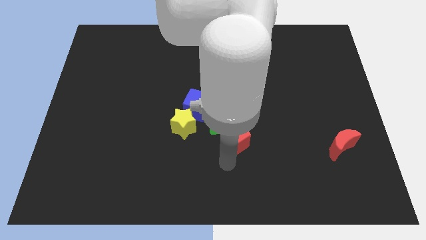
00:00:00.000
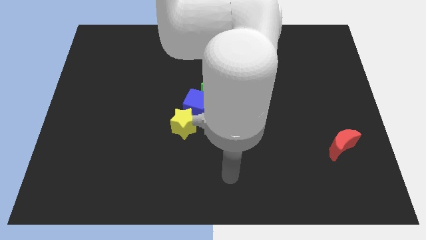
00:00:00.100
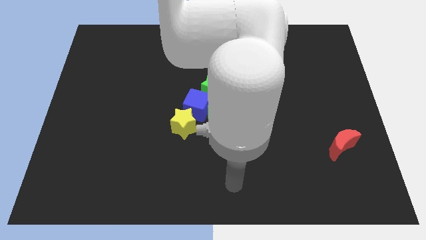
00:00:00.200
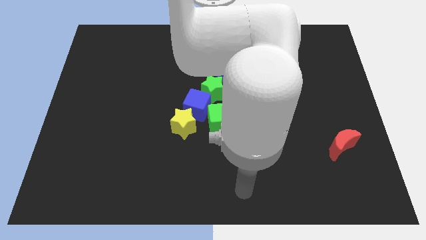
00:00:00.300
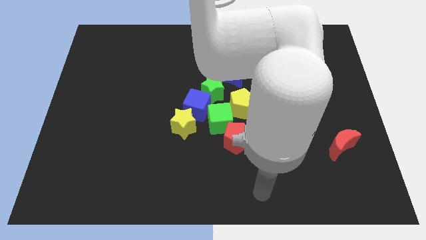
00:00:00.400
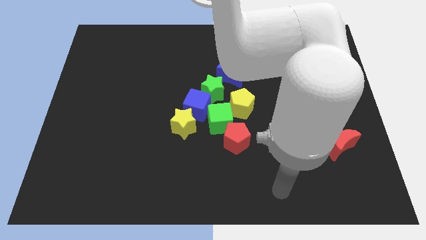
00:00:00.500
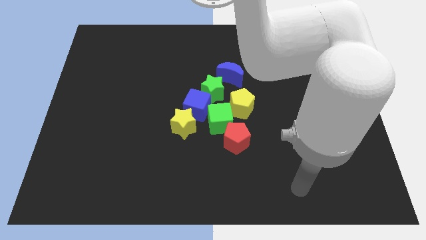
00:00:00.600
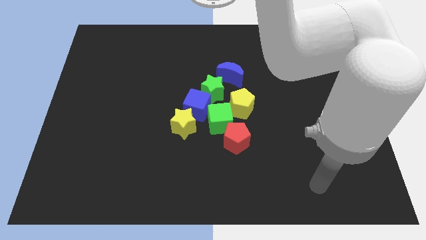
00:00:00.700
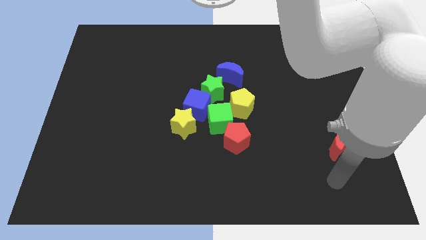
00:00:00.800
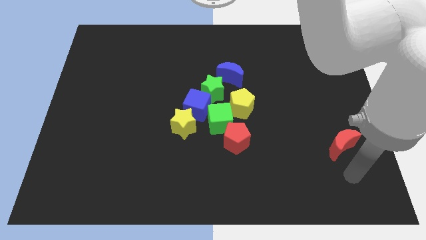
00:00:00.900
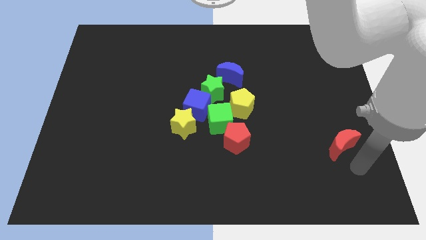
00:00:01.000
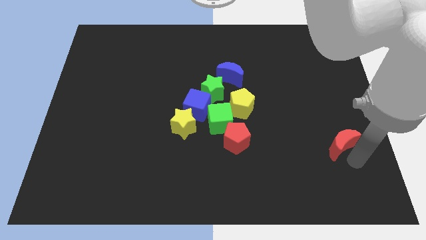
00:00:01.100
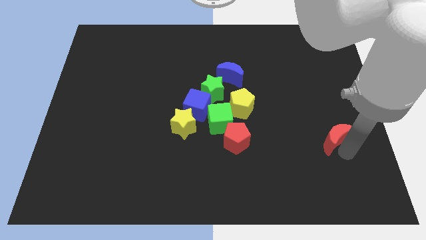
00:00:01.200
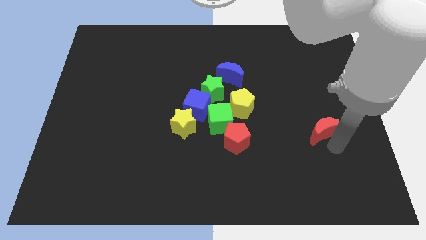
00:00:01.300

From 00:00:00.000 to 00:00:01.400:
move away from the red pentagon

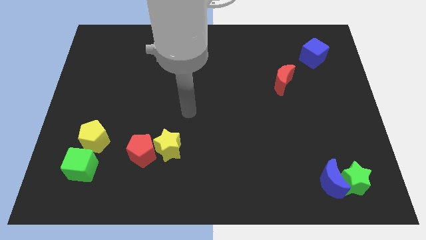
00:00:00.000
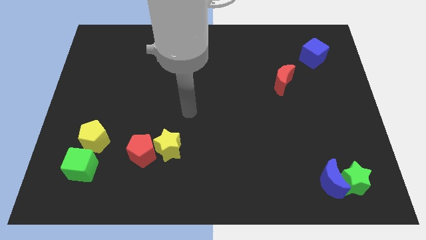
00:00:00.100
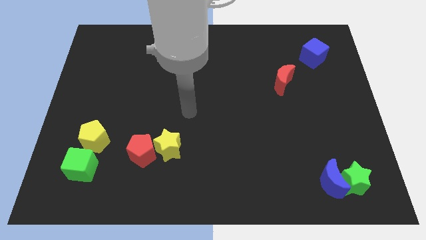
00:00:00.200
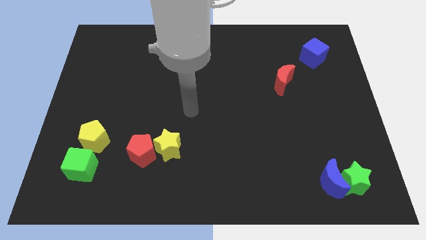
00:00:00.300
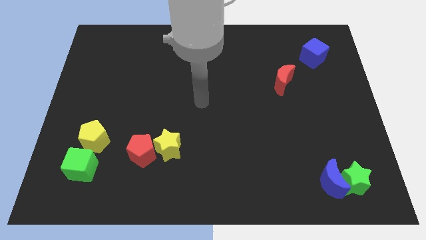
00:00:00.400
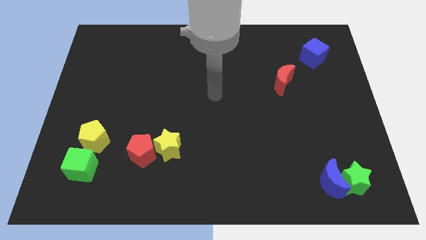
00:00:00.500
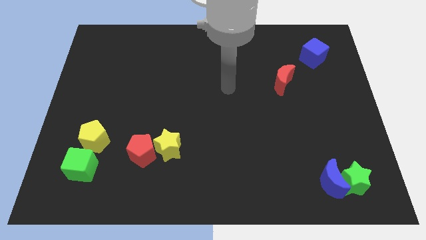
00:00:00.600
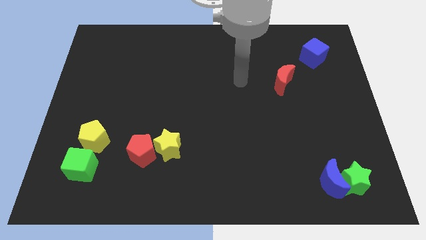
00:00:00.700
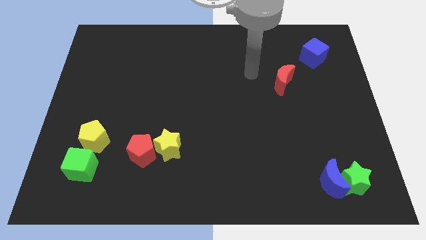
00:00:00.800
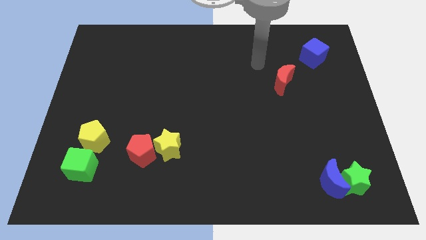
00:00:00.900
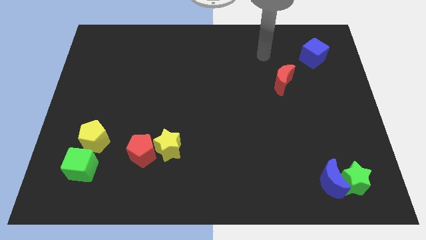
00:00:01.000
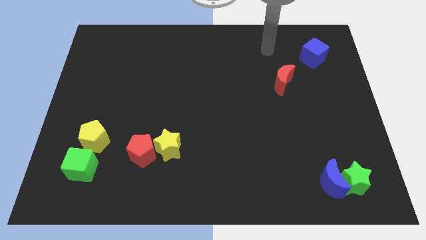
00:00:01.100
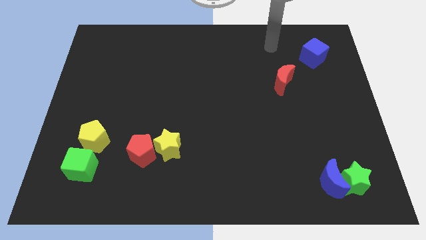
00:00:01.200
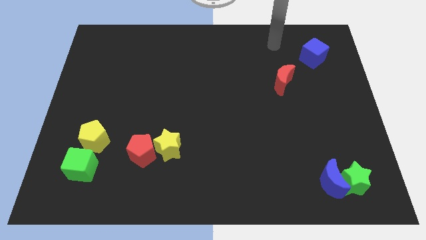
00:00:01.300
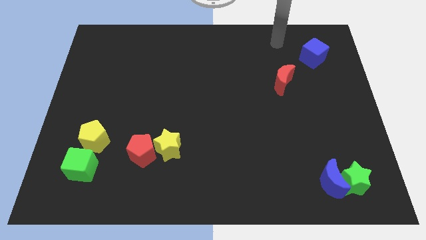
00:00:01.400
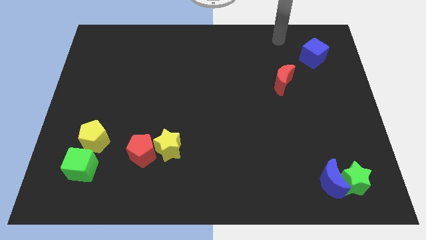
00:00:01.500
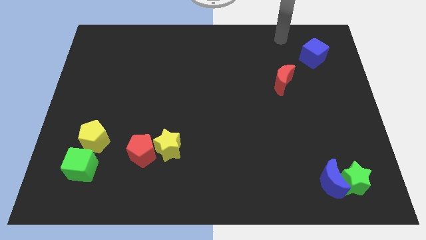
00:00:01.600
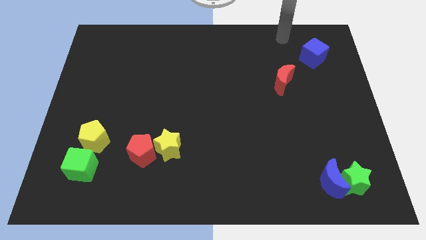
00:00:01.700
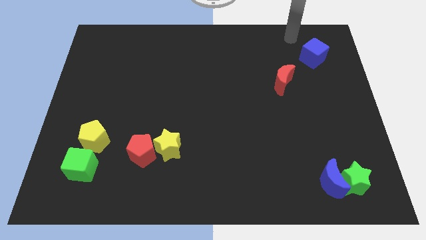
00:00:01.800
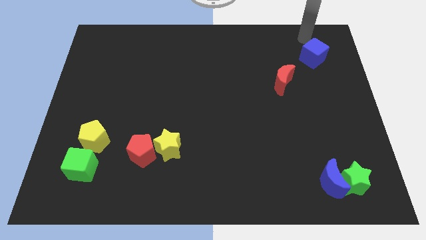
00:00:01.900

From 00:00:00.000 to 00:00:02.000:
move the arm towards the blue cube on the board

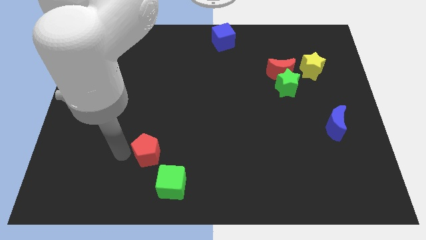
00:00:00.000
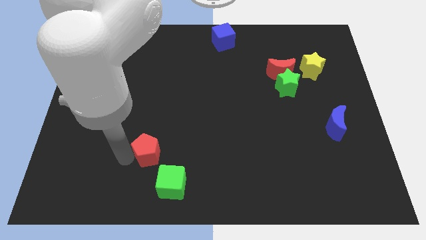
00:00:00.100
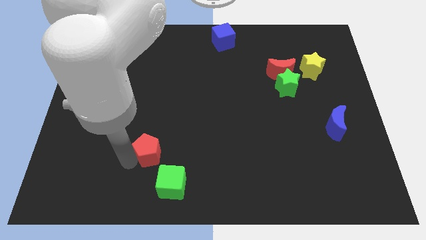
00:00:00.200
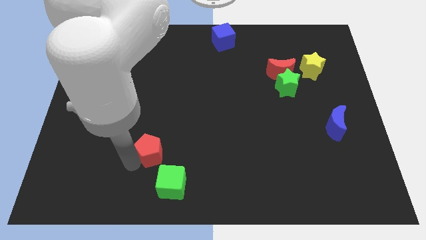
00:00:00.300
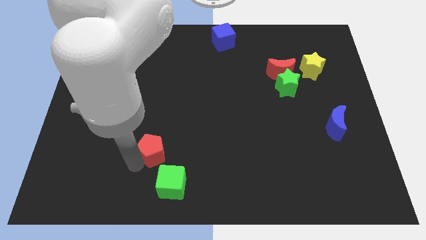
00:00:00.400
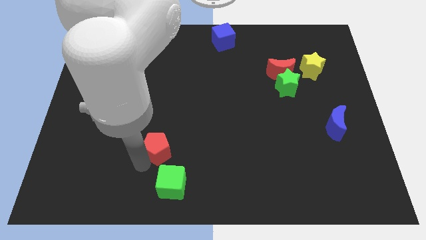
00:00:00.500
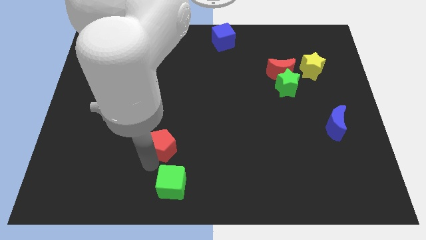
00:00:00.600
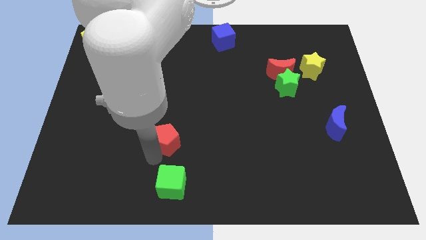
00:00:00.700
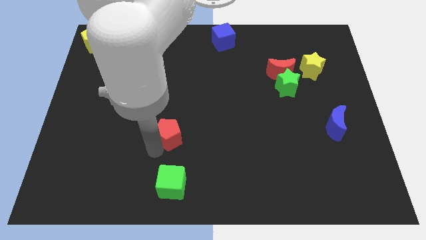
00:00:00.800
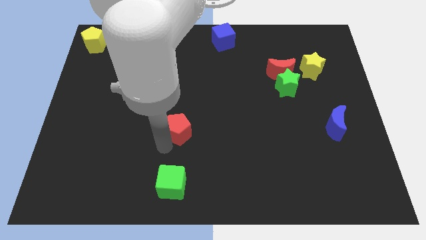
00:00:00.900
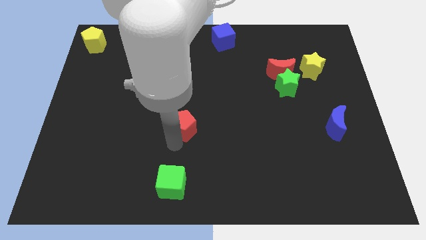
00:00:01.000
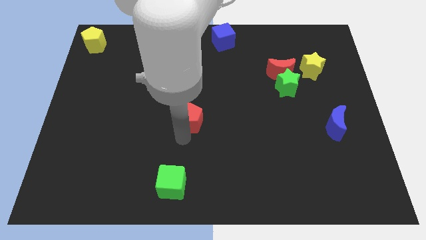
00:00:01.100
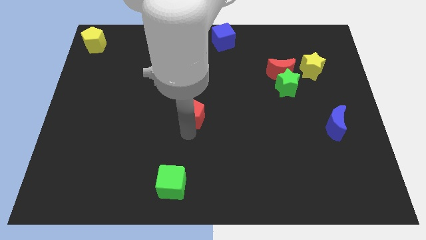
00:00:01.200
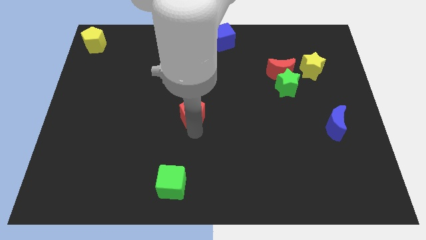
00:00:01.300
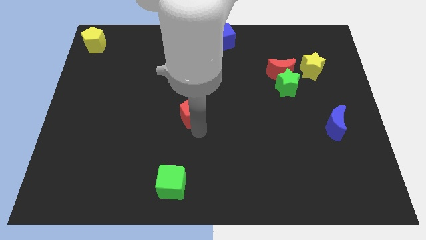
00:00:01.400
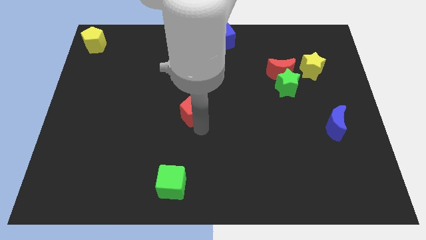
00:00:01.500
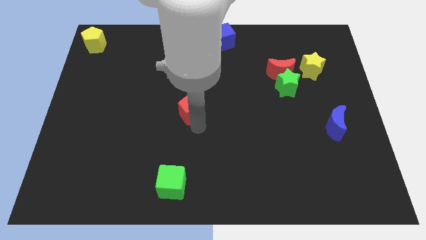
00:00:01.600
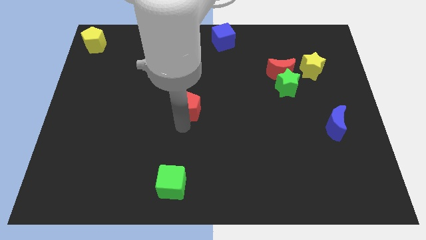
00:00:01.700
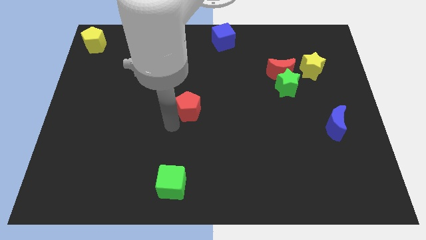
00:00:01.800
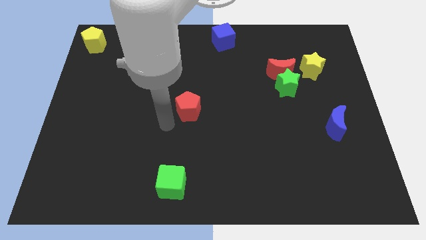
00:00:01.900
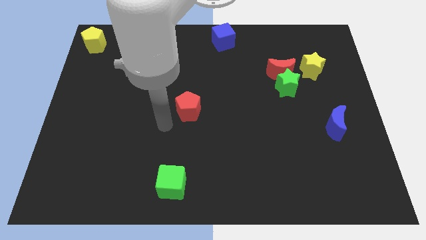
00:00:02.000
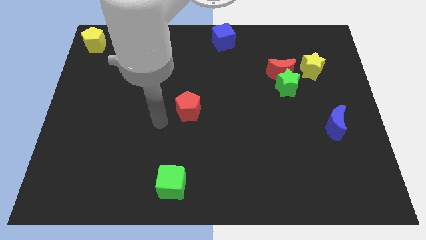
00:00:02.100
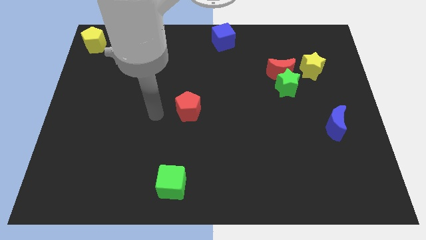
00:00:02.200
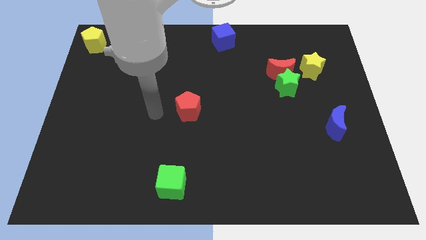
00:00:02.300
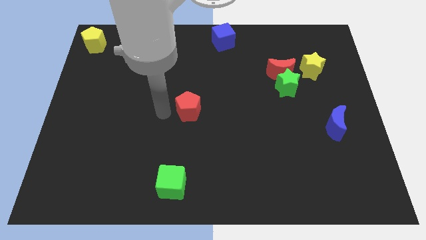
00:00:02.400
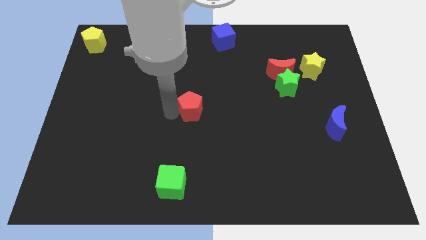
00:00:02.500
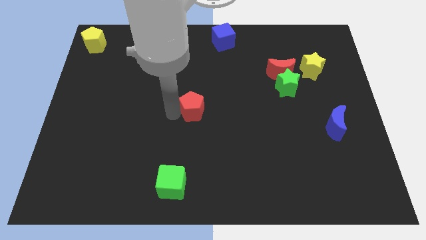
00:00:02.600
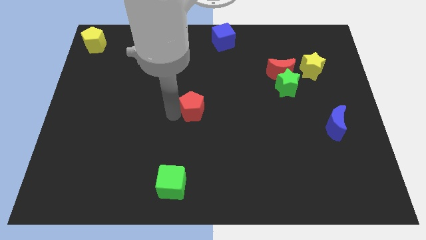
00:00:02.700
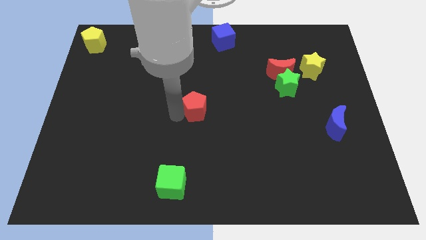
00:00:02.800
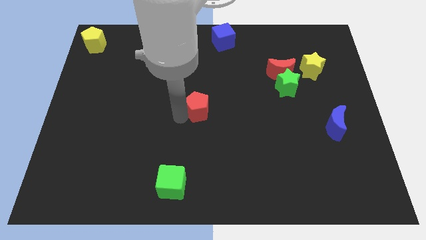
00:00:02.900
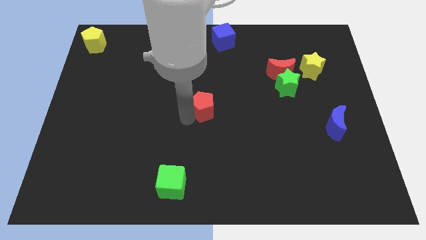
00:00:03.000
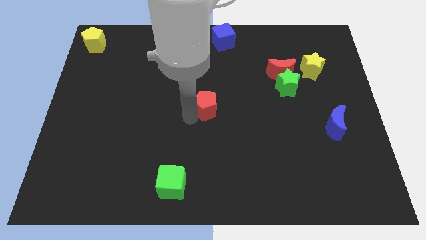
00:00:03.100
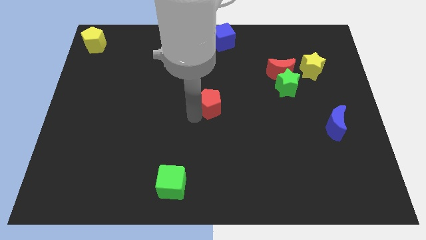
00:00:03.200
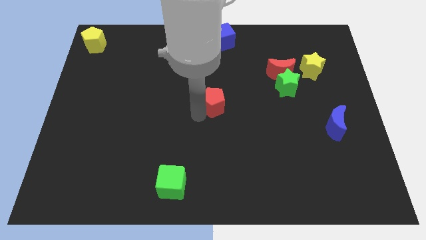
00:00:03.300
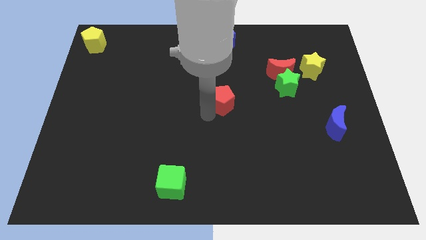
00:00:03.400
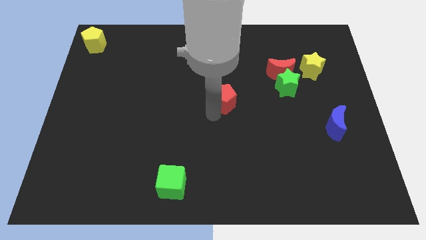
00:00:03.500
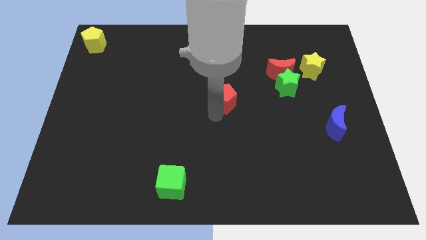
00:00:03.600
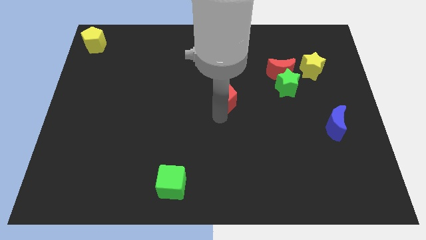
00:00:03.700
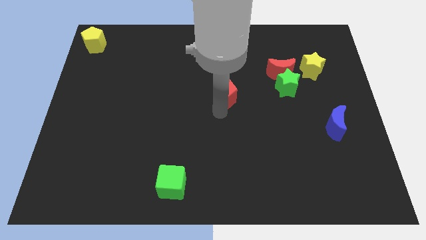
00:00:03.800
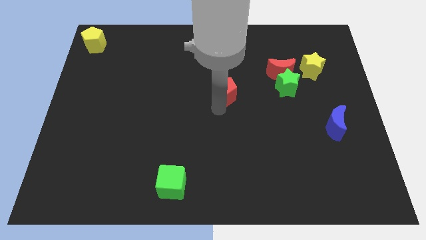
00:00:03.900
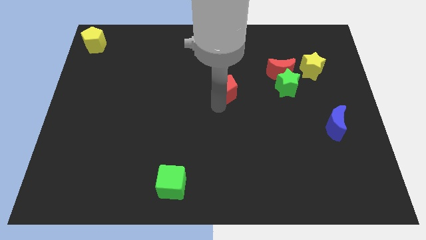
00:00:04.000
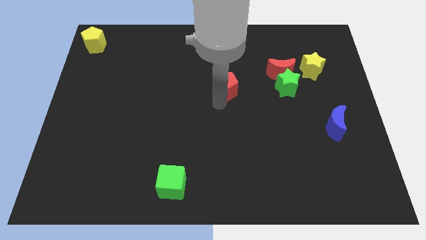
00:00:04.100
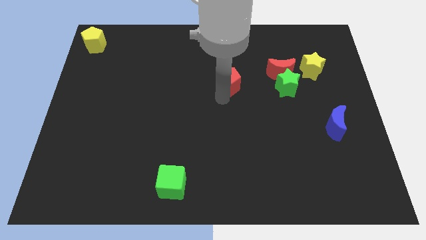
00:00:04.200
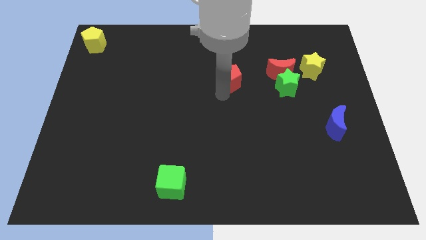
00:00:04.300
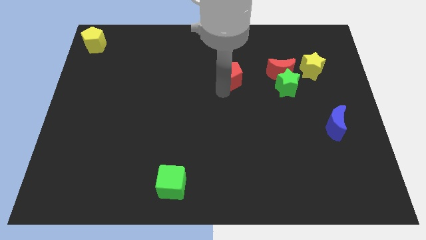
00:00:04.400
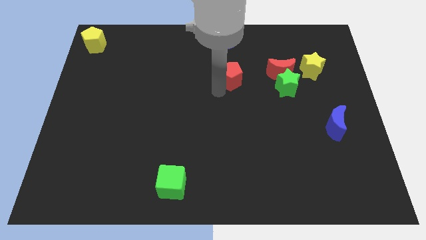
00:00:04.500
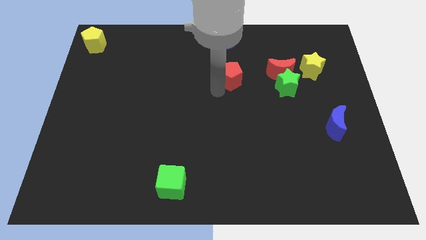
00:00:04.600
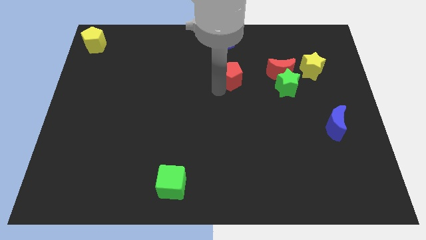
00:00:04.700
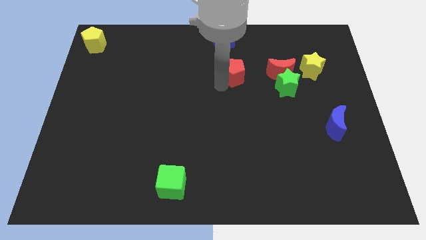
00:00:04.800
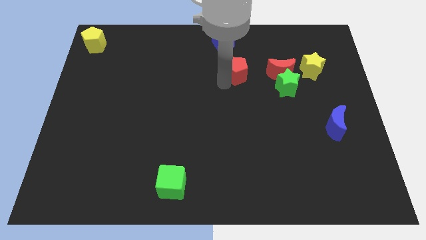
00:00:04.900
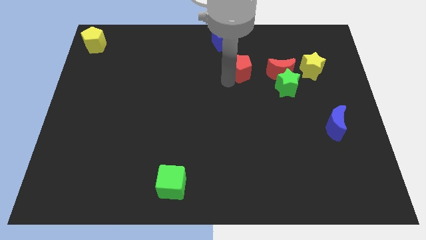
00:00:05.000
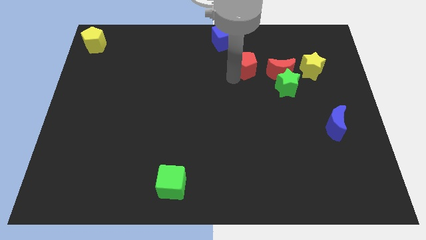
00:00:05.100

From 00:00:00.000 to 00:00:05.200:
place red pentagon adjacent to red moon

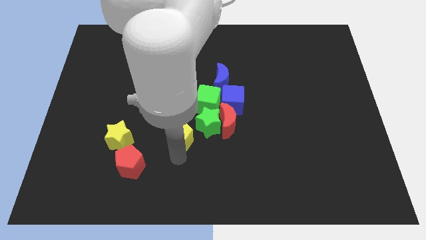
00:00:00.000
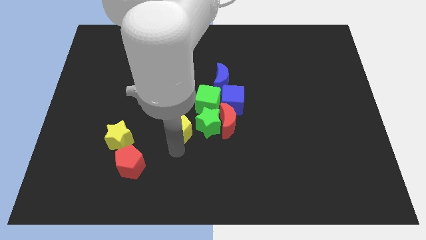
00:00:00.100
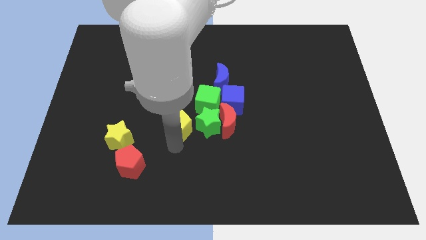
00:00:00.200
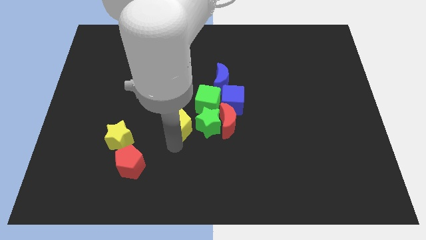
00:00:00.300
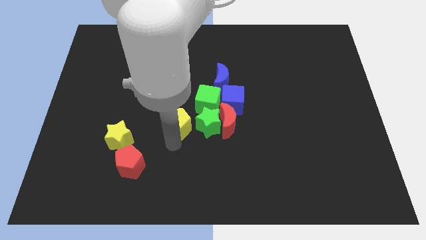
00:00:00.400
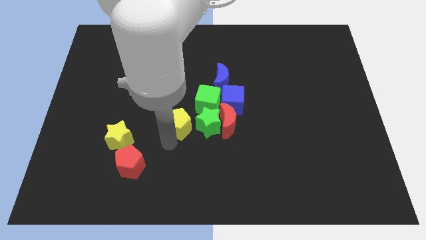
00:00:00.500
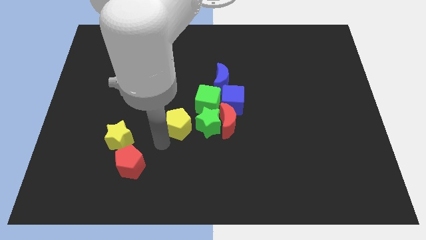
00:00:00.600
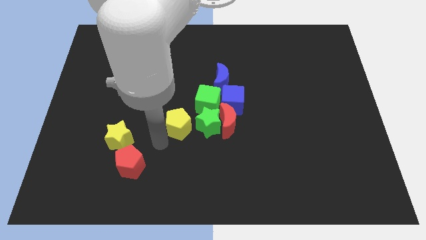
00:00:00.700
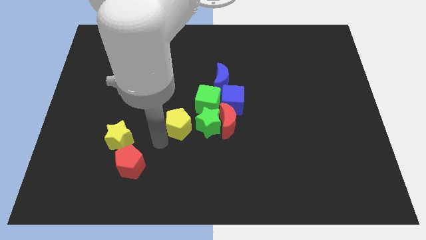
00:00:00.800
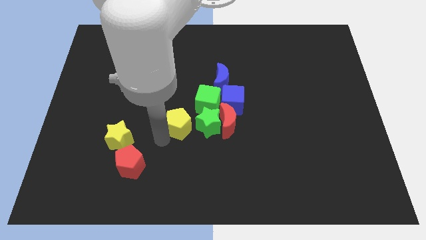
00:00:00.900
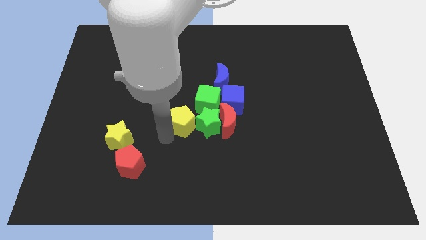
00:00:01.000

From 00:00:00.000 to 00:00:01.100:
slide yellow pentagon to left of green star
